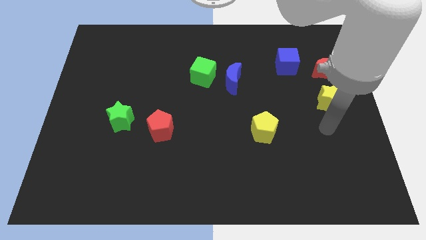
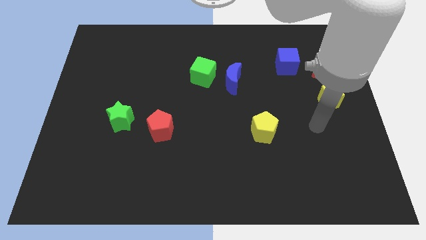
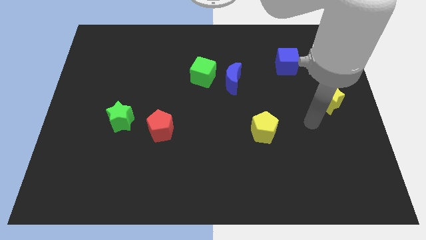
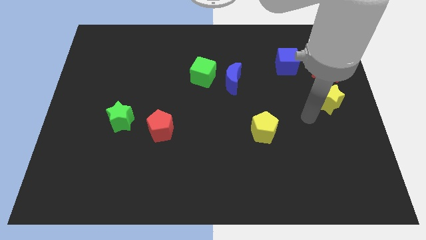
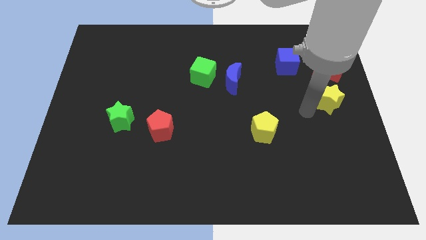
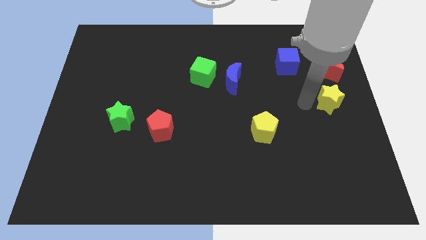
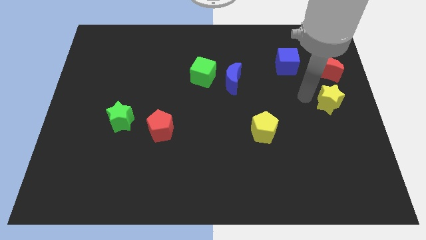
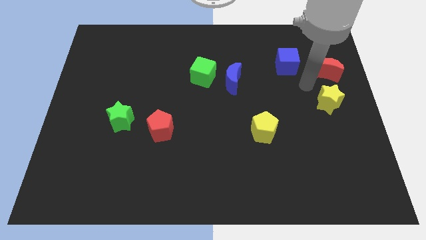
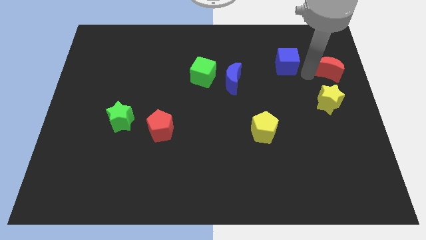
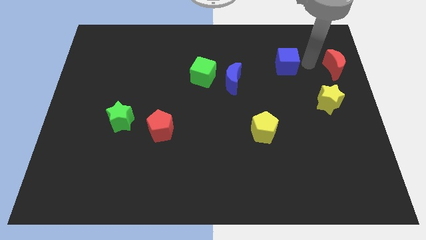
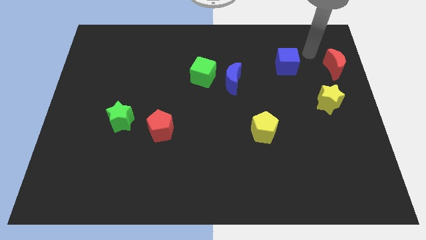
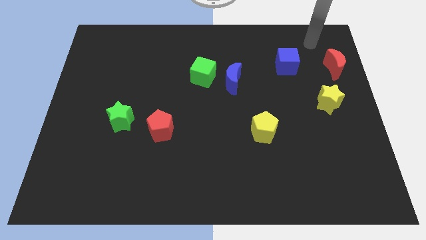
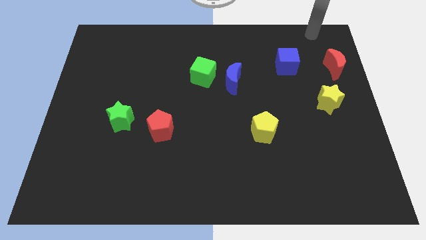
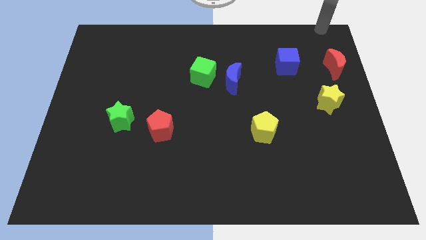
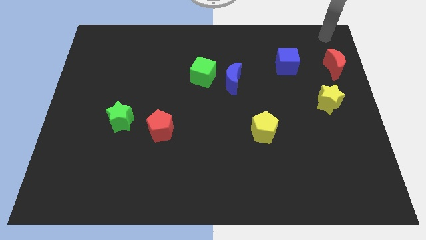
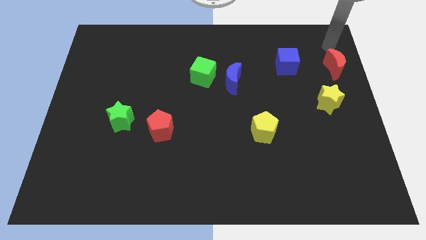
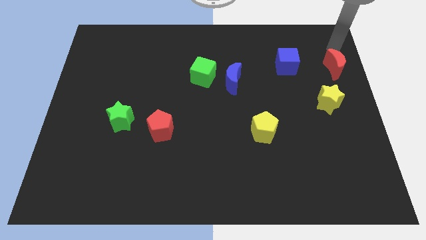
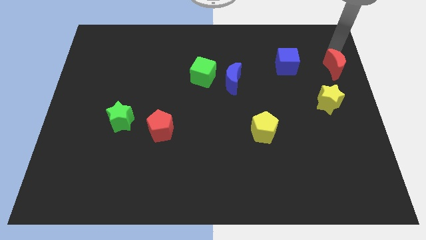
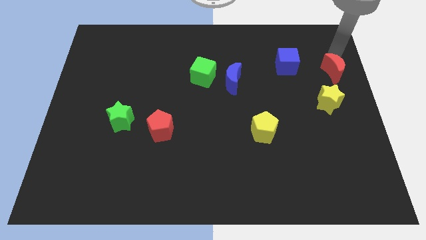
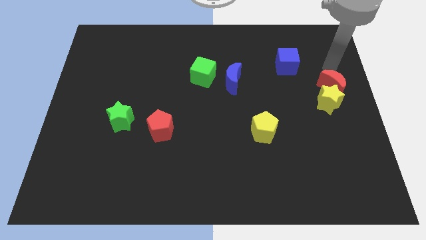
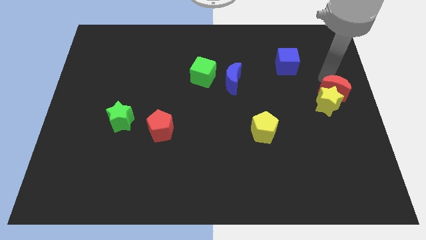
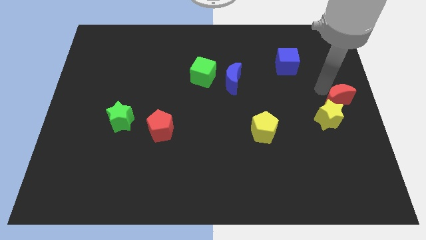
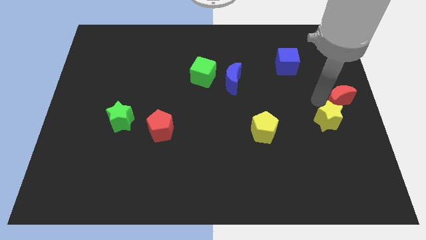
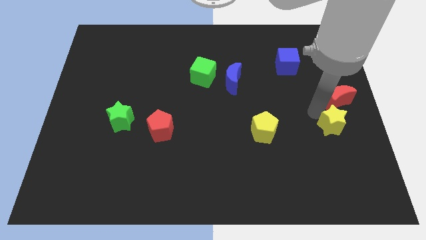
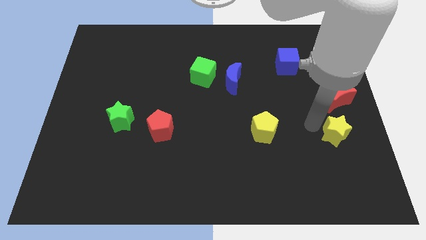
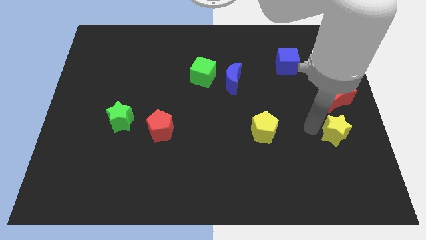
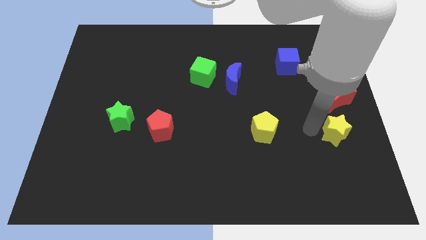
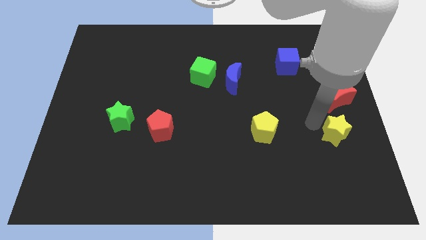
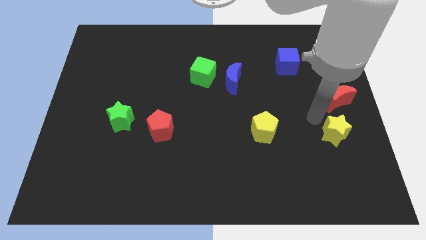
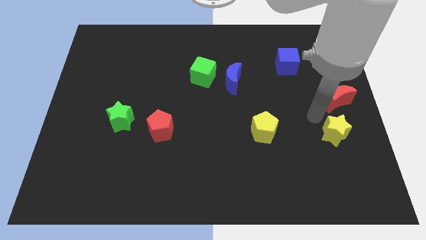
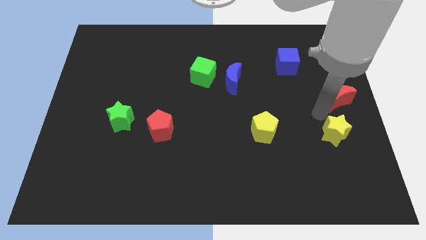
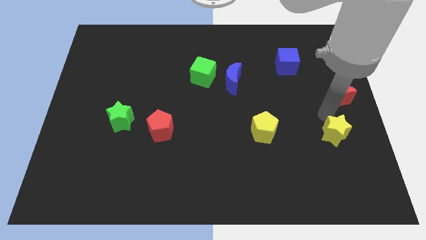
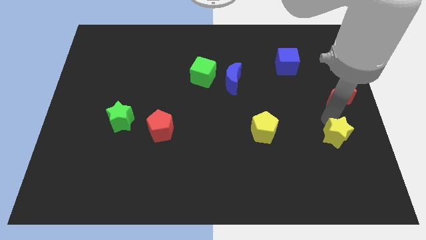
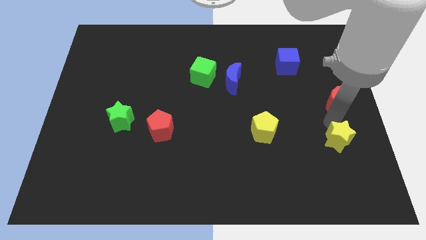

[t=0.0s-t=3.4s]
push the red moon into the yellow star

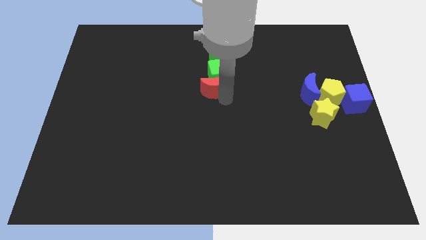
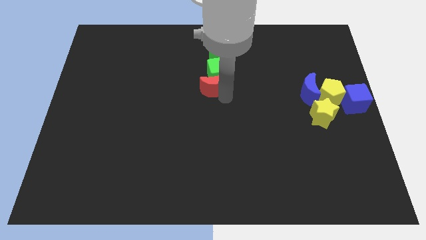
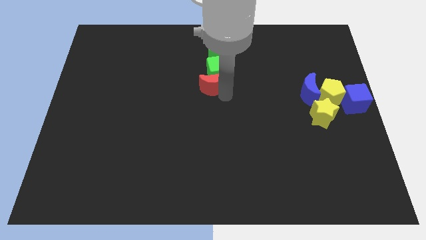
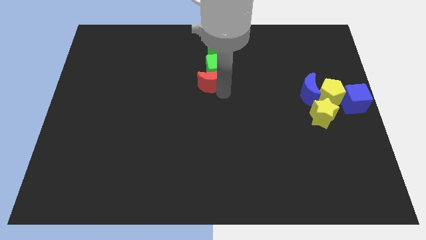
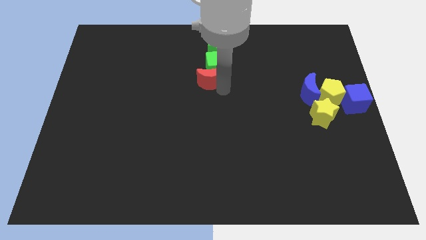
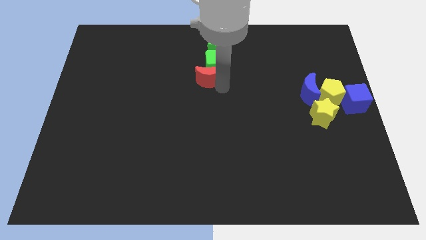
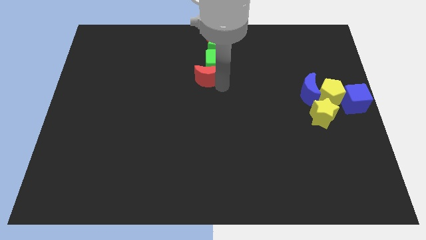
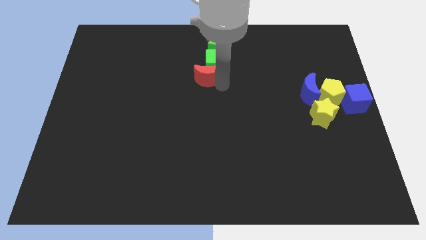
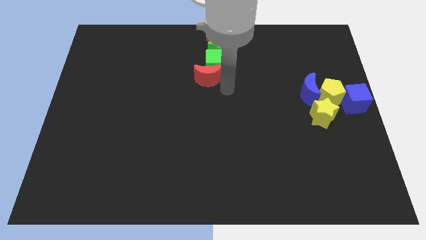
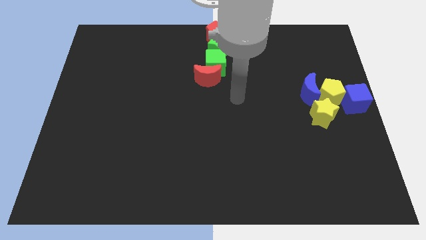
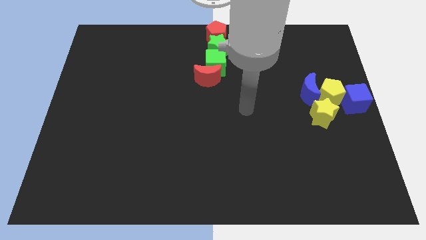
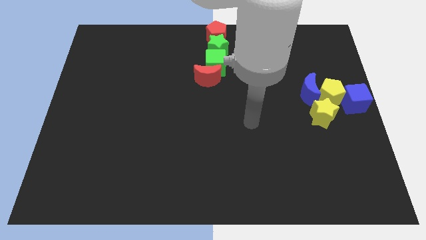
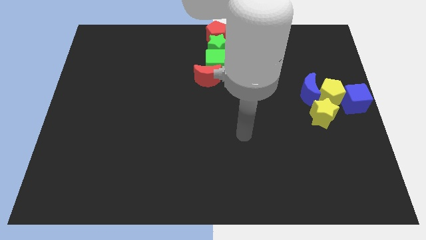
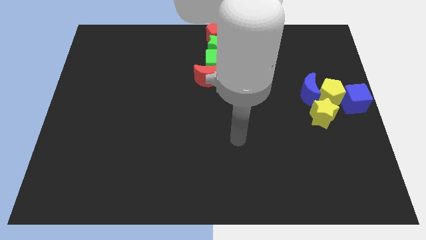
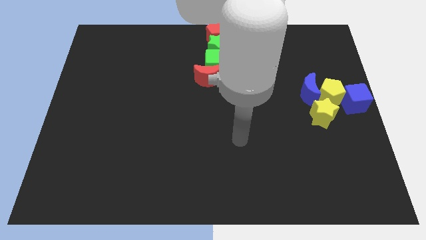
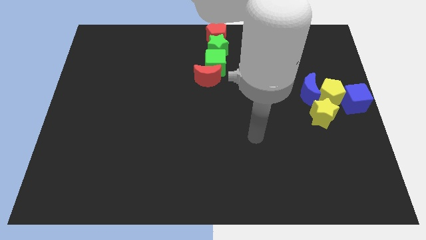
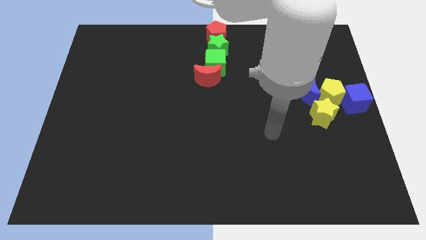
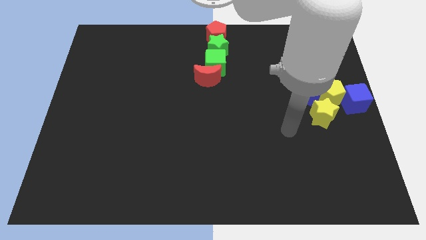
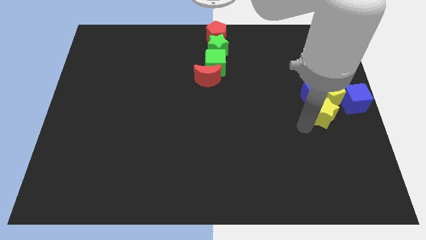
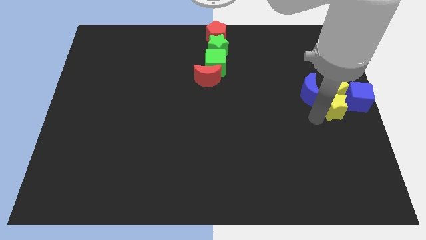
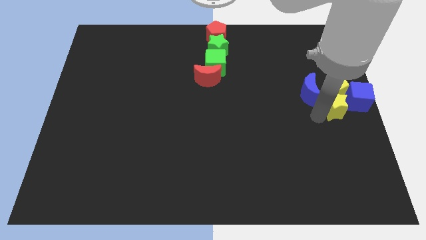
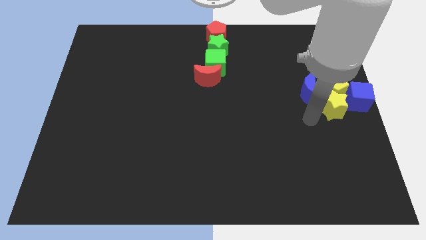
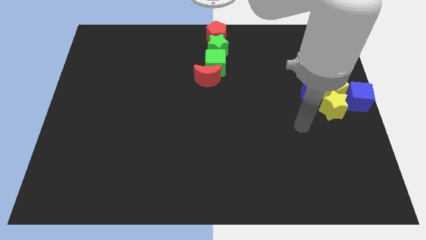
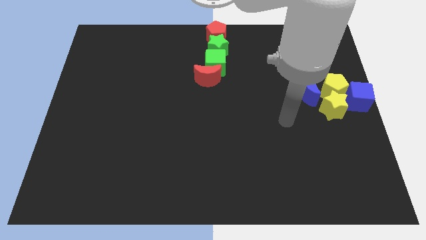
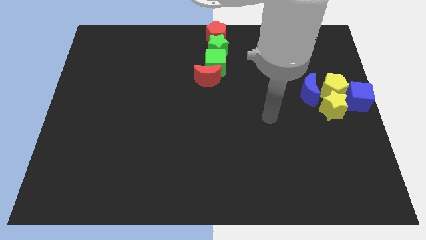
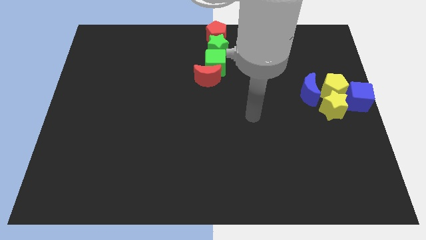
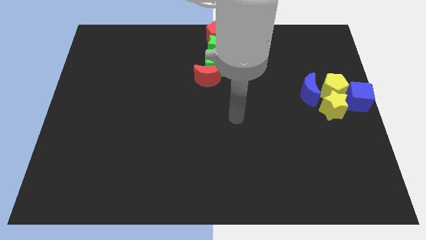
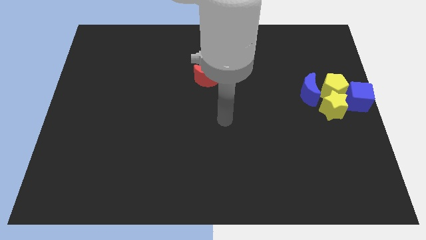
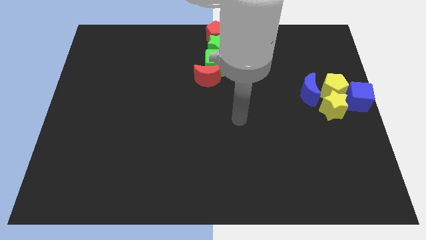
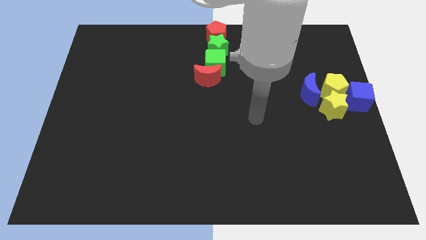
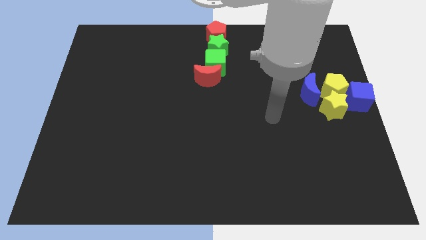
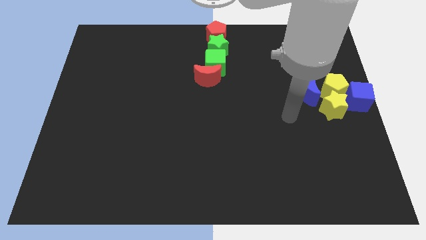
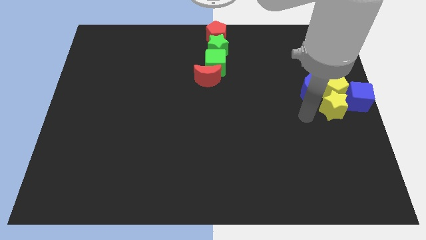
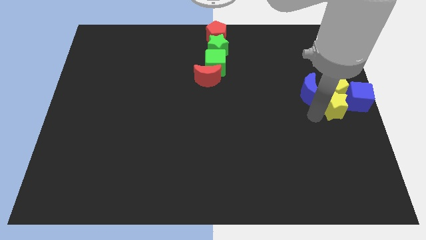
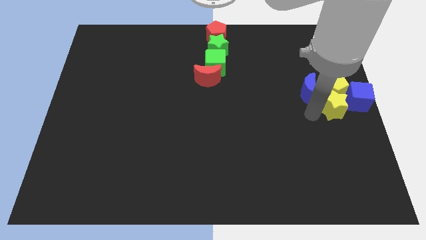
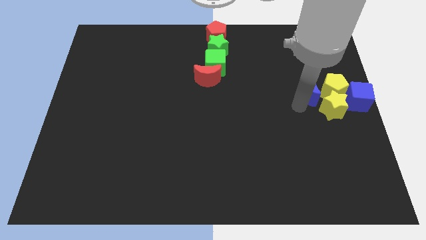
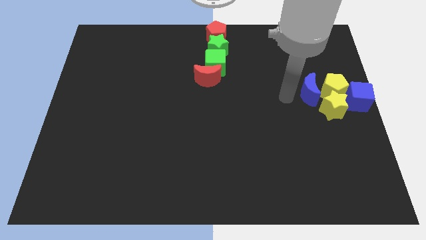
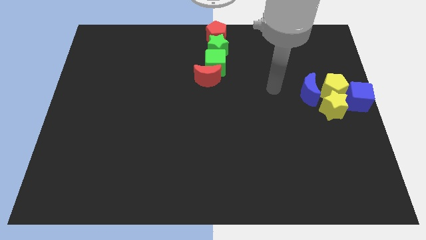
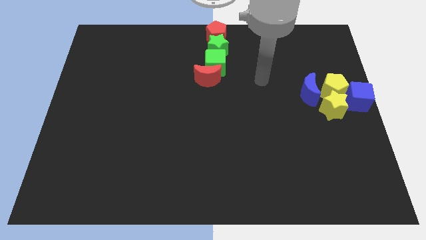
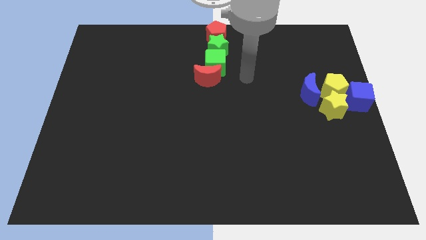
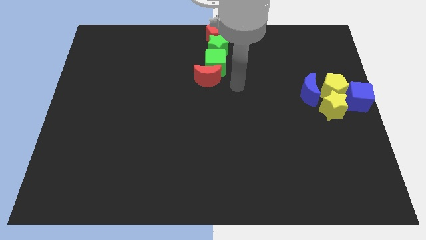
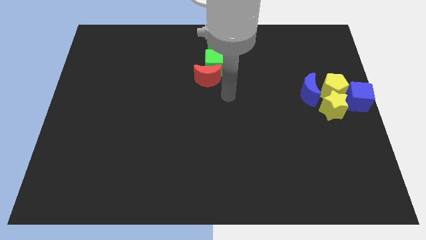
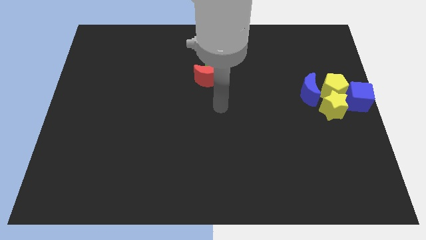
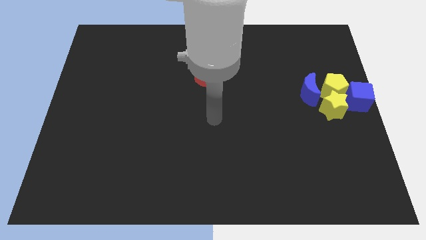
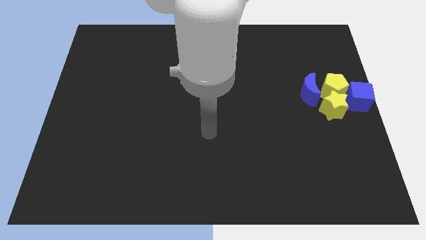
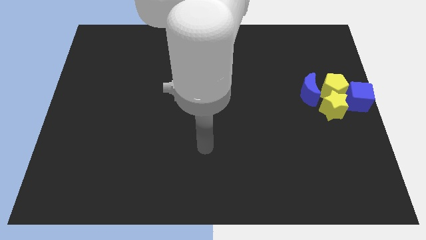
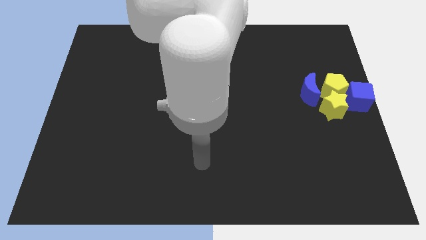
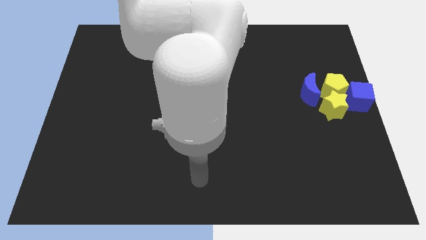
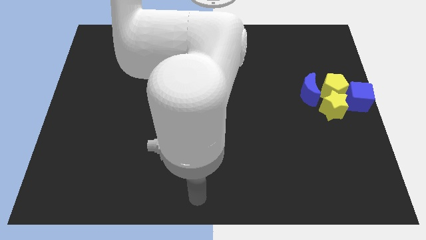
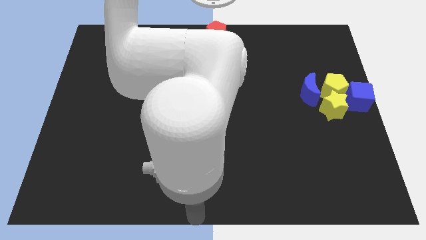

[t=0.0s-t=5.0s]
point your arm towards the bottom center of the board

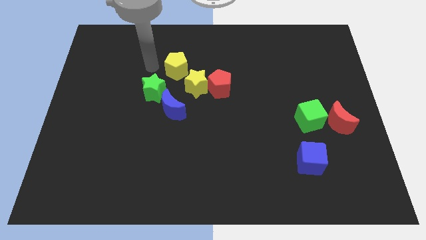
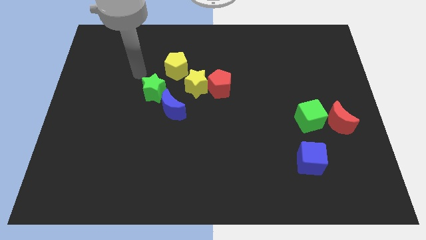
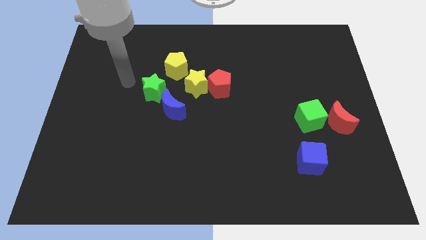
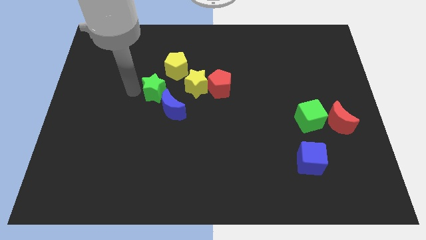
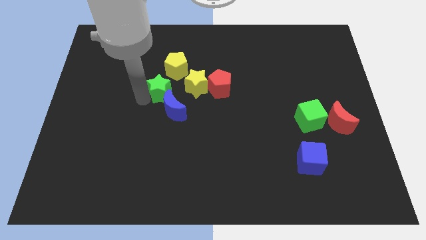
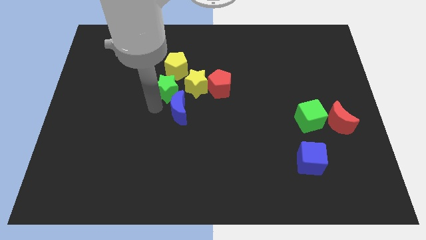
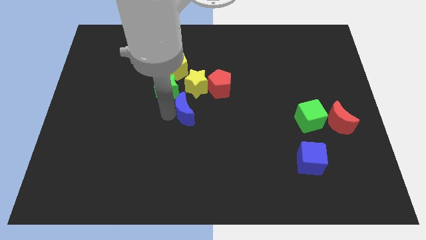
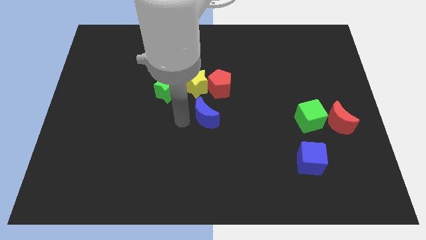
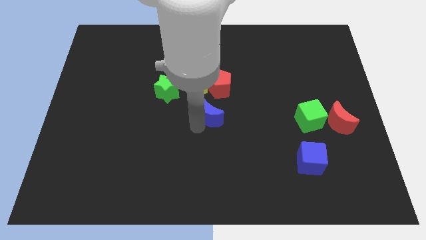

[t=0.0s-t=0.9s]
push the green star into the blue moon
